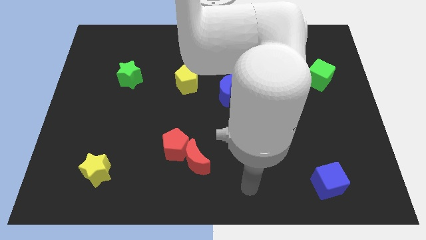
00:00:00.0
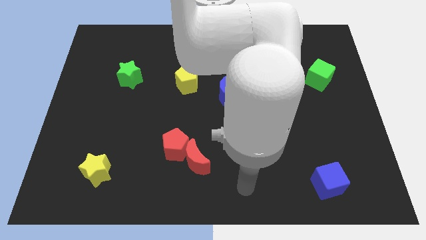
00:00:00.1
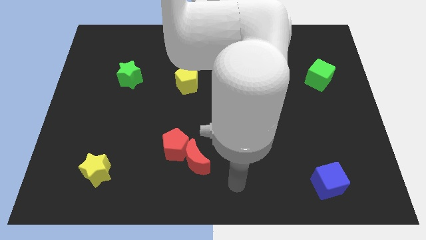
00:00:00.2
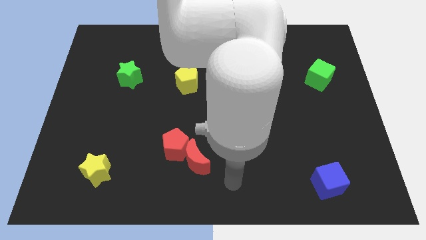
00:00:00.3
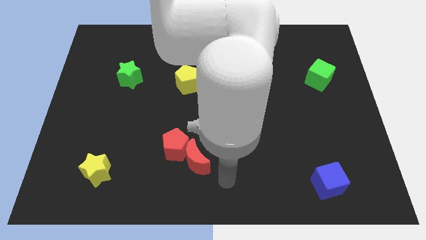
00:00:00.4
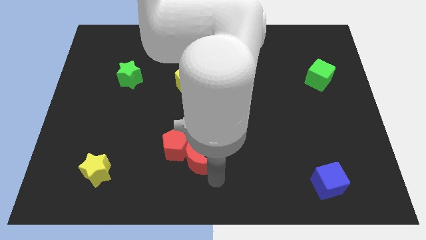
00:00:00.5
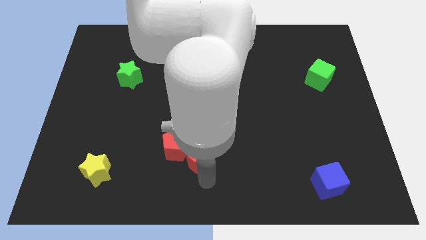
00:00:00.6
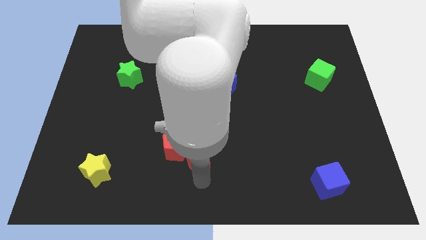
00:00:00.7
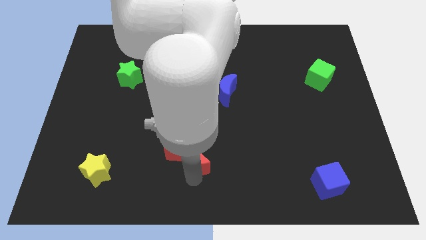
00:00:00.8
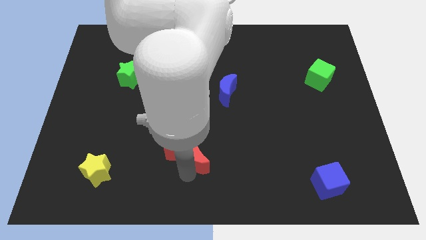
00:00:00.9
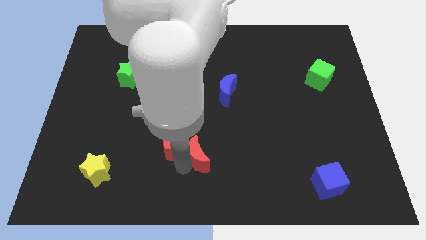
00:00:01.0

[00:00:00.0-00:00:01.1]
place arm at bottom right of red moon

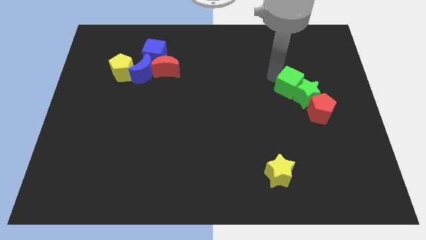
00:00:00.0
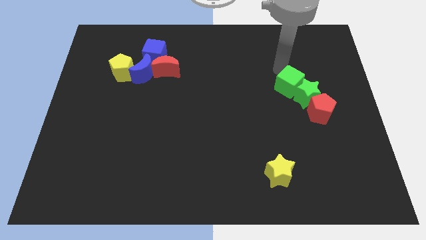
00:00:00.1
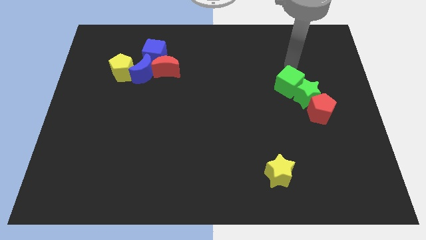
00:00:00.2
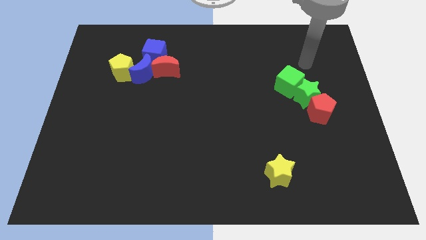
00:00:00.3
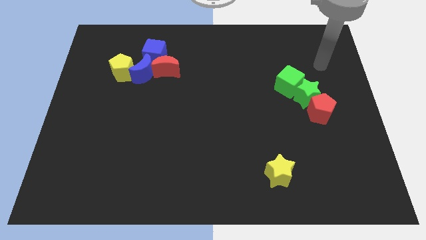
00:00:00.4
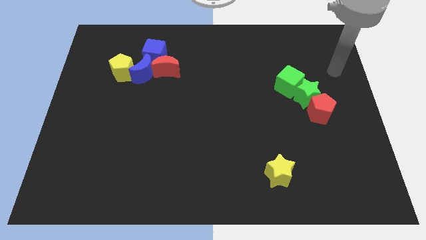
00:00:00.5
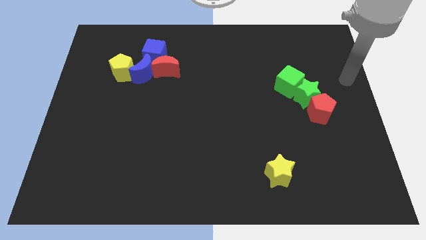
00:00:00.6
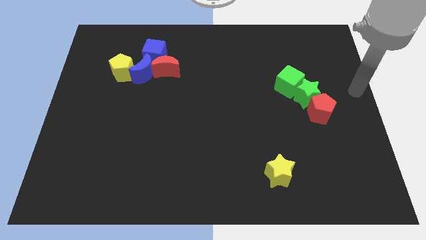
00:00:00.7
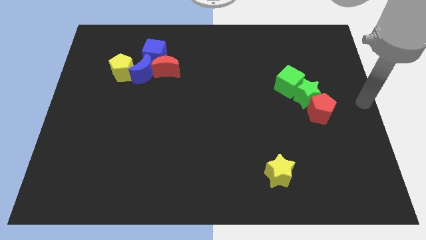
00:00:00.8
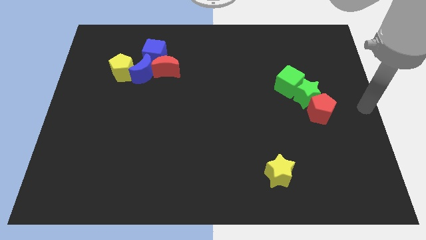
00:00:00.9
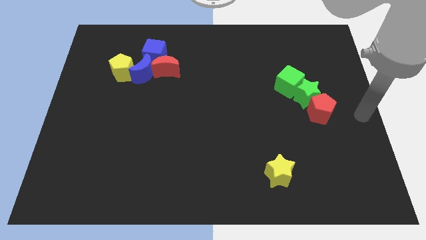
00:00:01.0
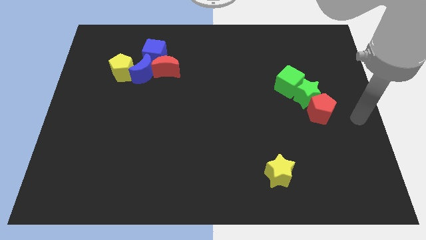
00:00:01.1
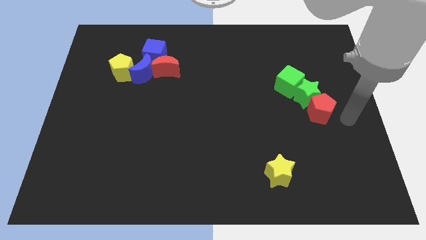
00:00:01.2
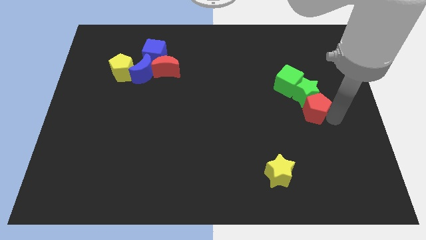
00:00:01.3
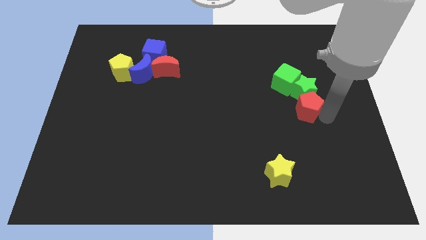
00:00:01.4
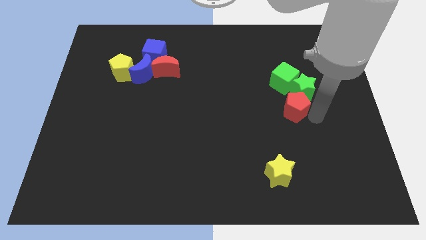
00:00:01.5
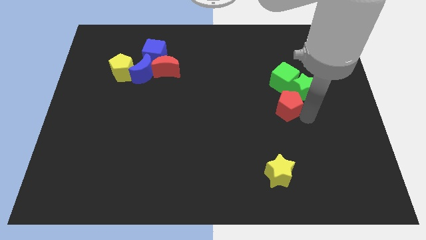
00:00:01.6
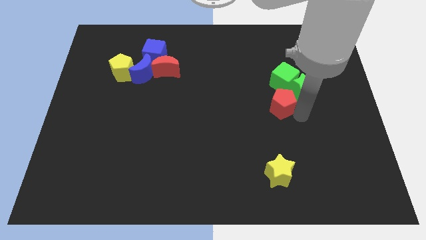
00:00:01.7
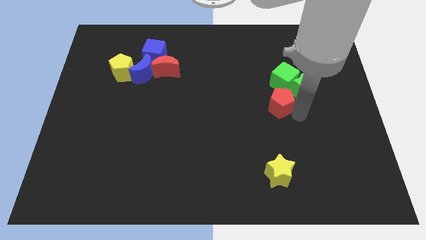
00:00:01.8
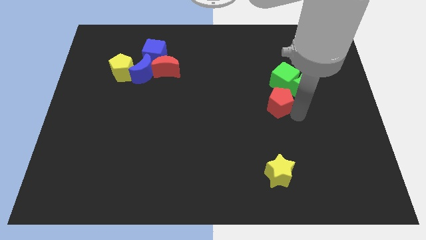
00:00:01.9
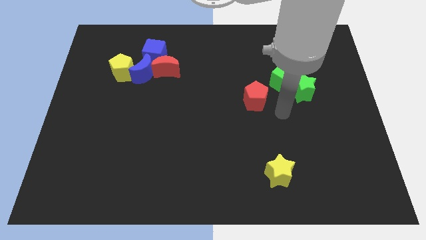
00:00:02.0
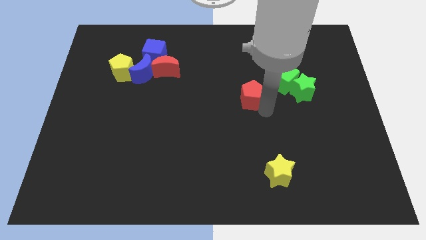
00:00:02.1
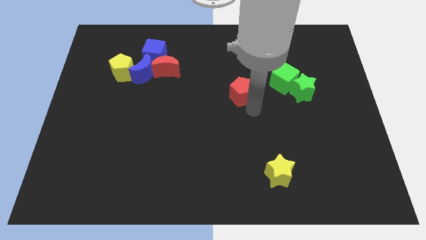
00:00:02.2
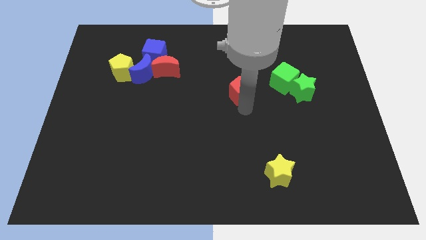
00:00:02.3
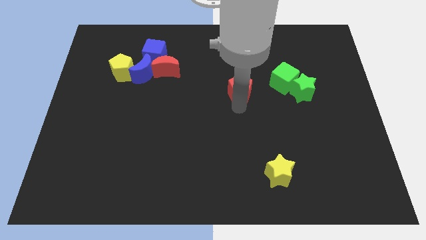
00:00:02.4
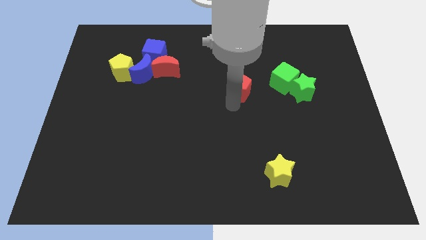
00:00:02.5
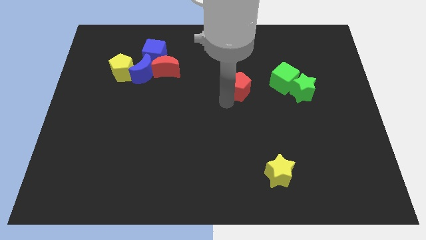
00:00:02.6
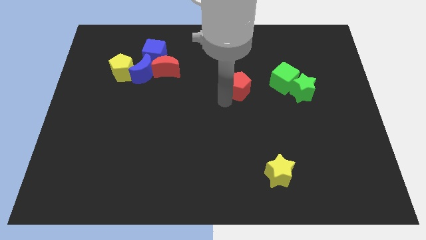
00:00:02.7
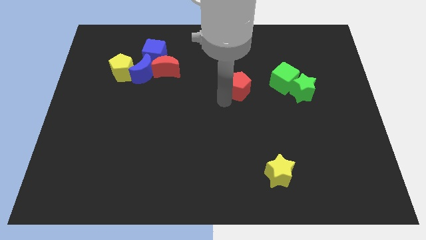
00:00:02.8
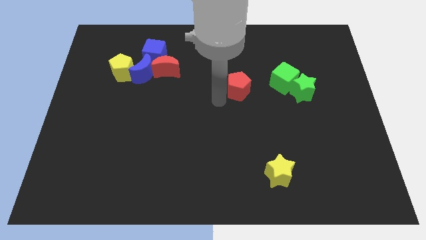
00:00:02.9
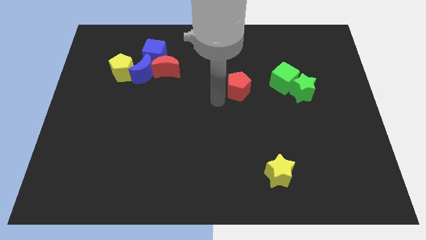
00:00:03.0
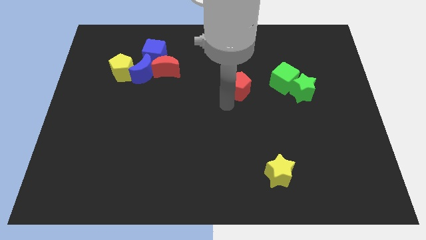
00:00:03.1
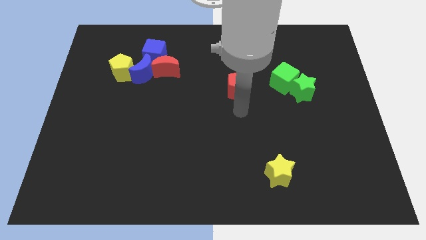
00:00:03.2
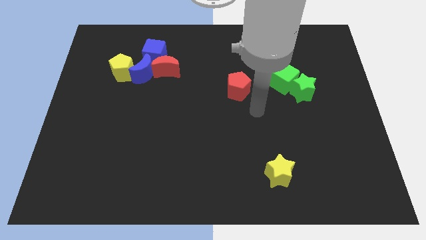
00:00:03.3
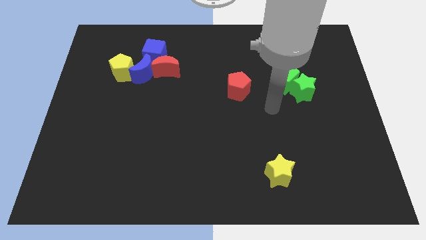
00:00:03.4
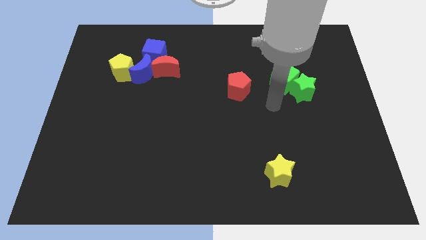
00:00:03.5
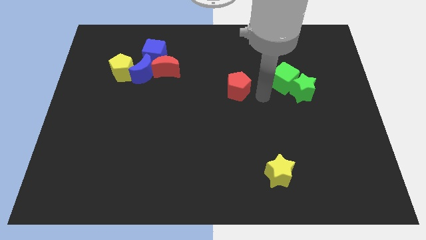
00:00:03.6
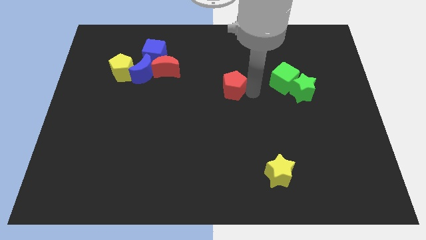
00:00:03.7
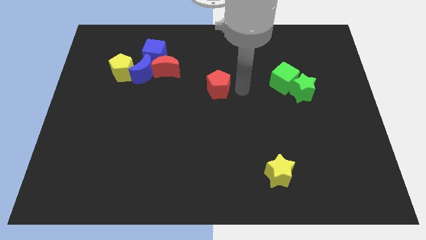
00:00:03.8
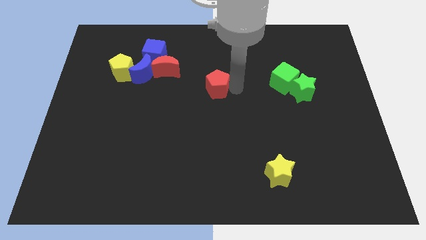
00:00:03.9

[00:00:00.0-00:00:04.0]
move the red pentagon towards the top center of the board

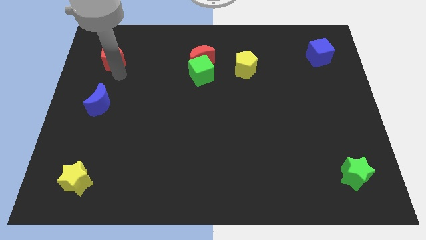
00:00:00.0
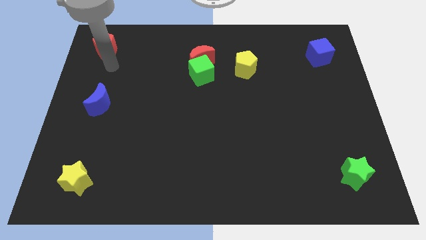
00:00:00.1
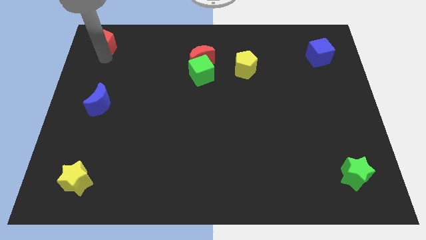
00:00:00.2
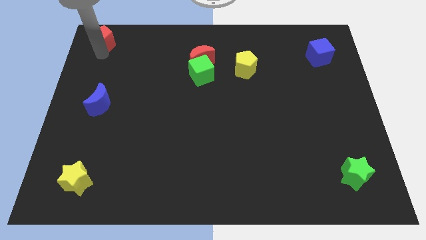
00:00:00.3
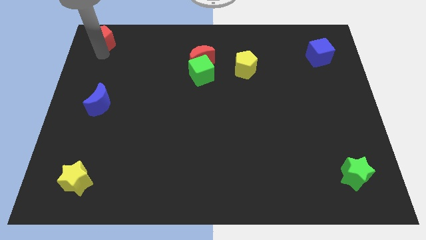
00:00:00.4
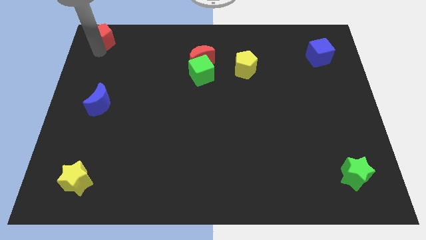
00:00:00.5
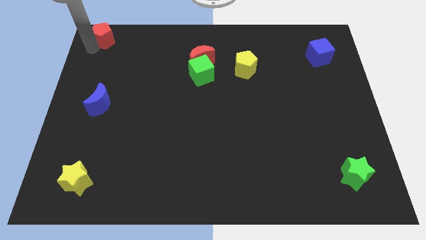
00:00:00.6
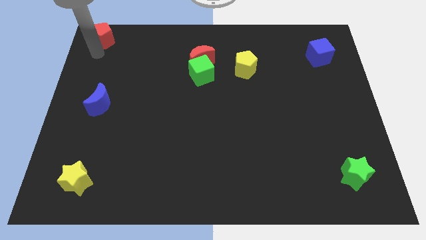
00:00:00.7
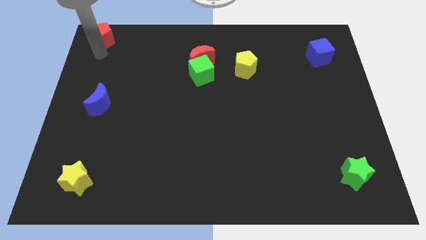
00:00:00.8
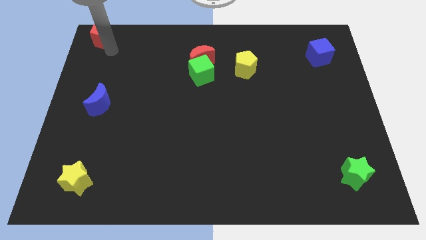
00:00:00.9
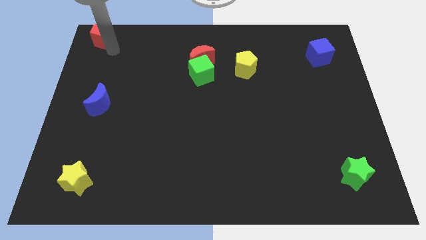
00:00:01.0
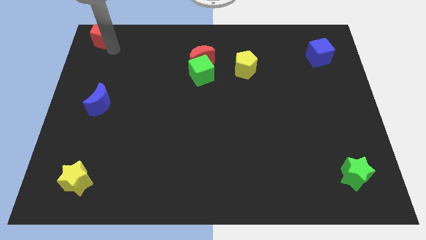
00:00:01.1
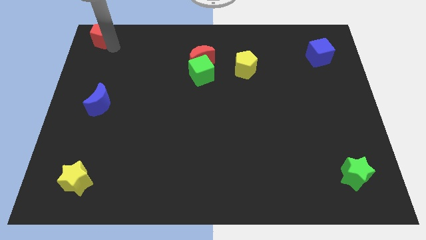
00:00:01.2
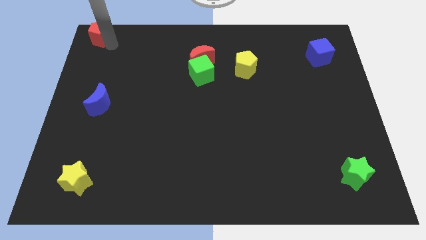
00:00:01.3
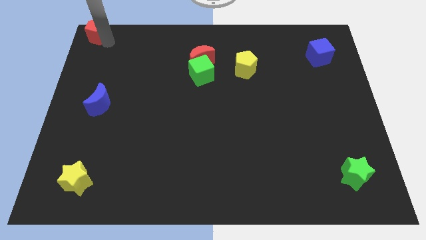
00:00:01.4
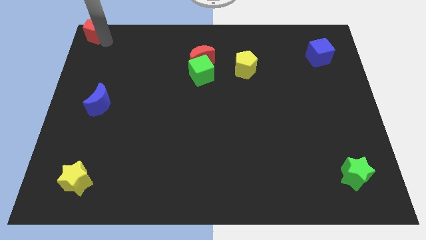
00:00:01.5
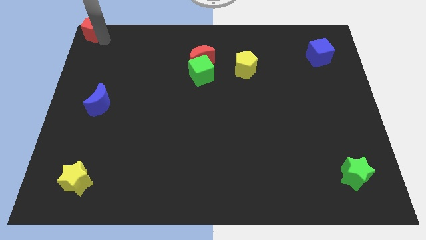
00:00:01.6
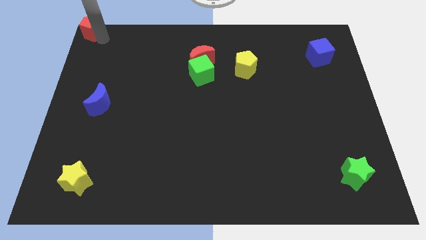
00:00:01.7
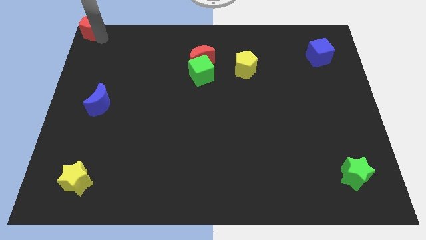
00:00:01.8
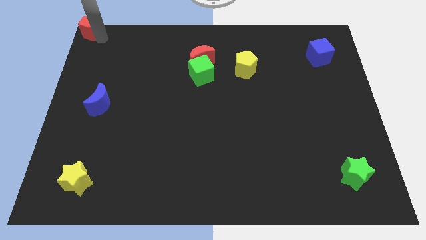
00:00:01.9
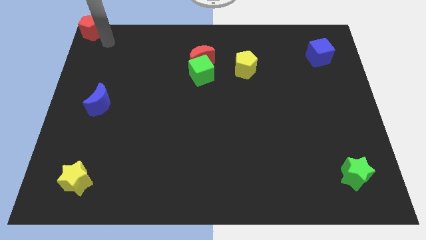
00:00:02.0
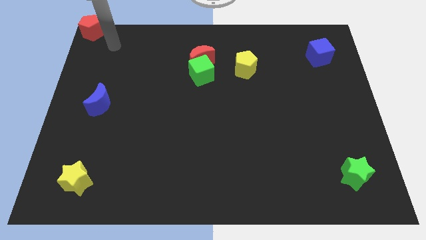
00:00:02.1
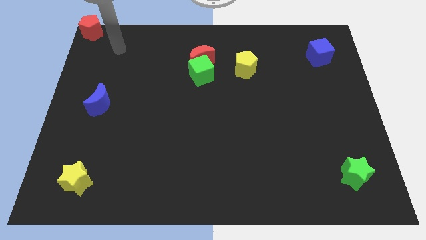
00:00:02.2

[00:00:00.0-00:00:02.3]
place the red pentagon to the top left corner of the board

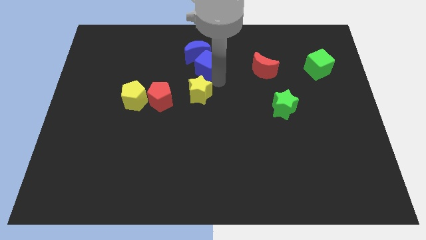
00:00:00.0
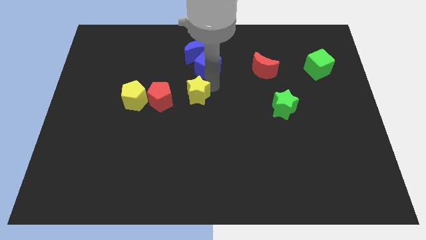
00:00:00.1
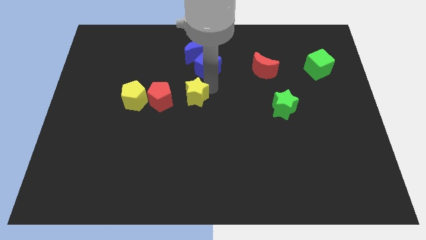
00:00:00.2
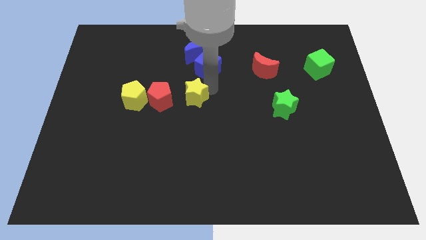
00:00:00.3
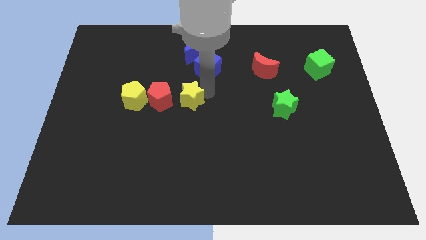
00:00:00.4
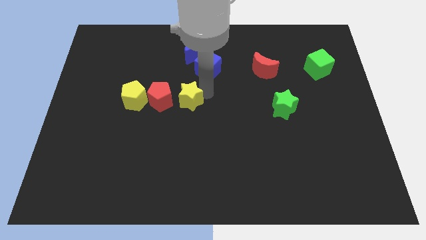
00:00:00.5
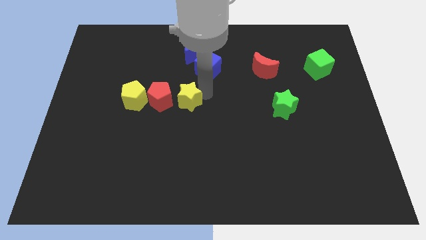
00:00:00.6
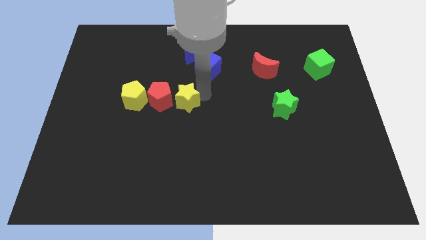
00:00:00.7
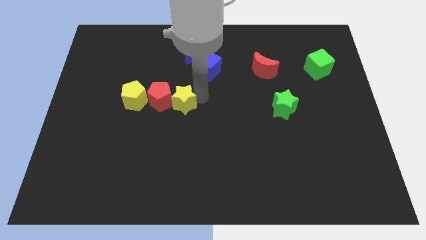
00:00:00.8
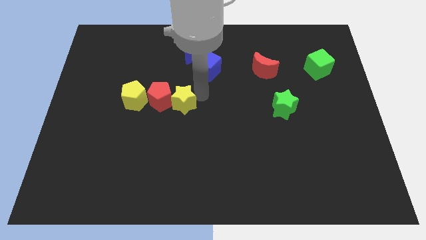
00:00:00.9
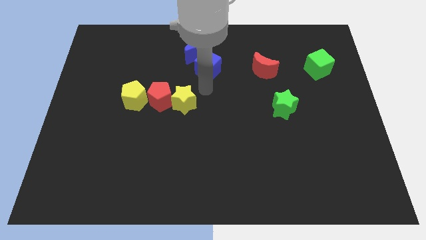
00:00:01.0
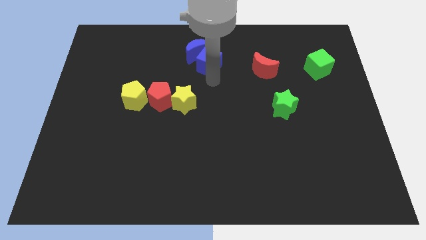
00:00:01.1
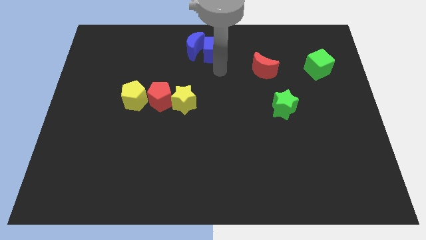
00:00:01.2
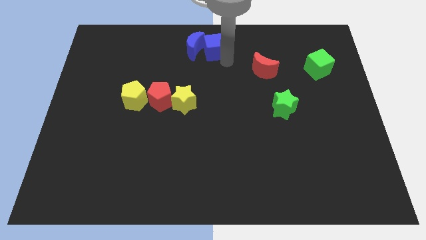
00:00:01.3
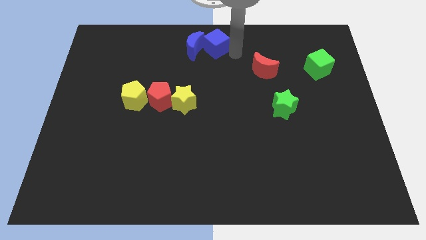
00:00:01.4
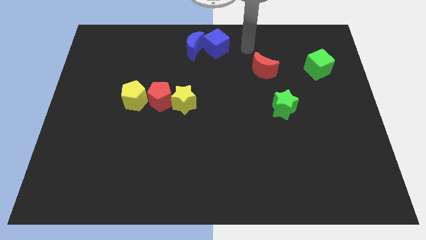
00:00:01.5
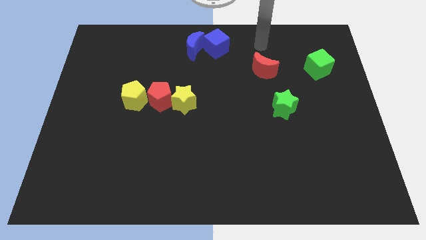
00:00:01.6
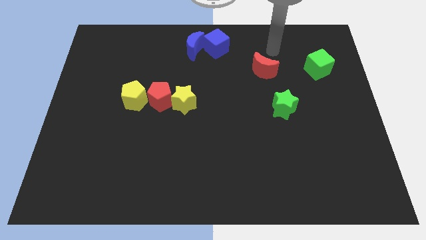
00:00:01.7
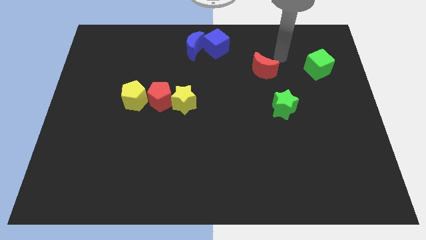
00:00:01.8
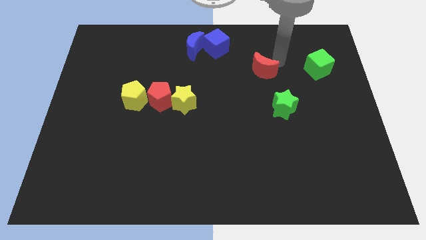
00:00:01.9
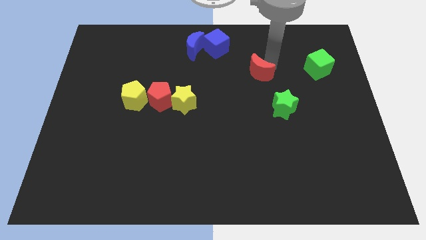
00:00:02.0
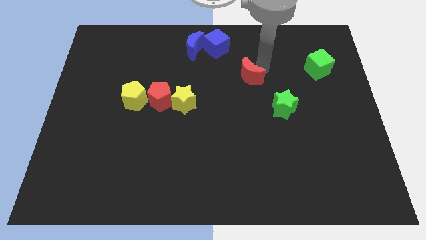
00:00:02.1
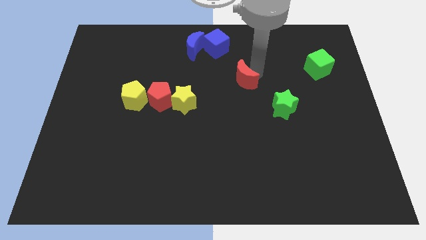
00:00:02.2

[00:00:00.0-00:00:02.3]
place the yellow star to right side of the red pentagon
